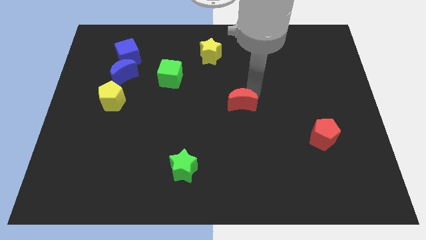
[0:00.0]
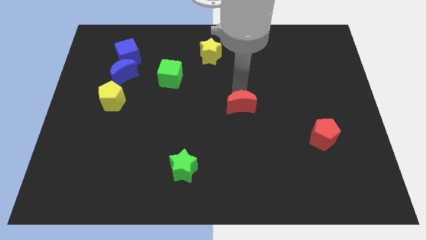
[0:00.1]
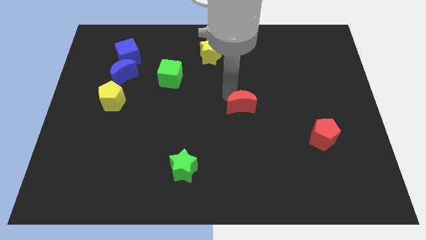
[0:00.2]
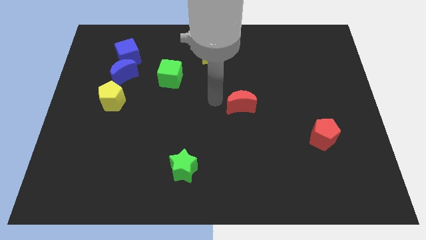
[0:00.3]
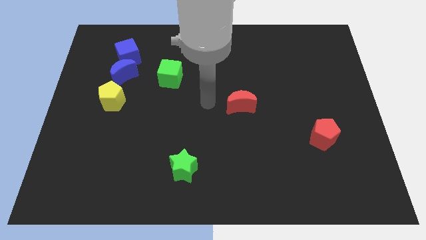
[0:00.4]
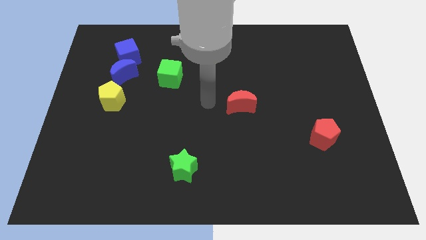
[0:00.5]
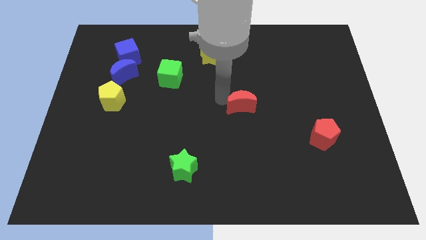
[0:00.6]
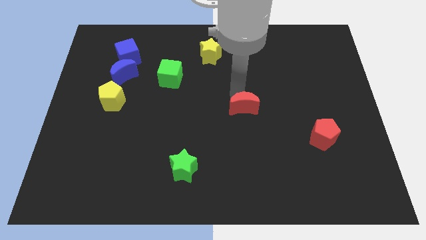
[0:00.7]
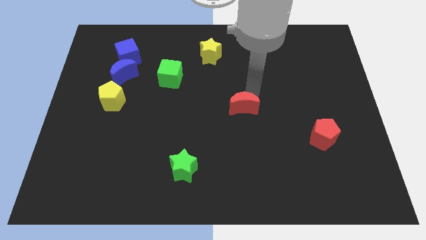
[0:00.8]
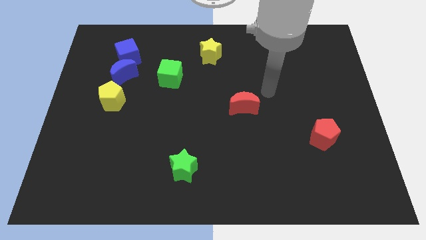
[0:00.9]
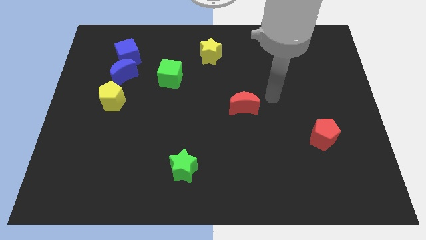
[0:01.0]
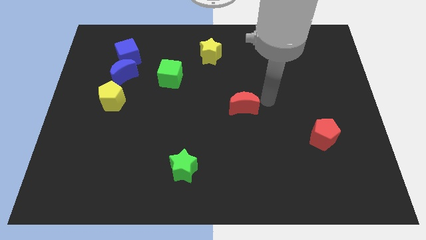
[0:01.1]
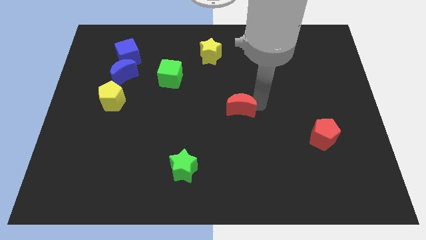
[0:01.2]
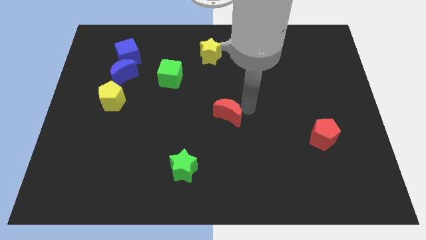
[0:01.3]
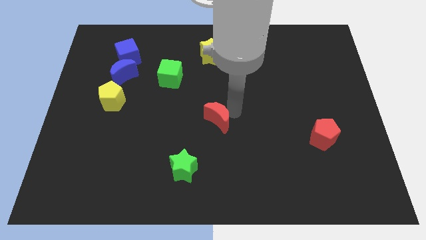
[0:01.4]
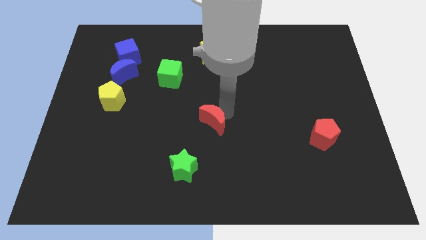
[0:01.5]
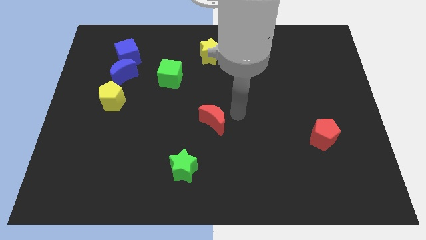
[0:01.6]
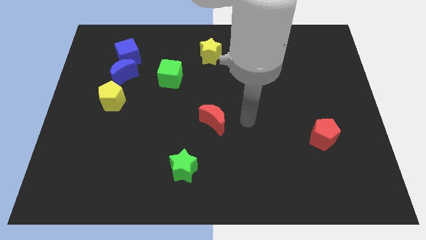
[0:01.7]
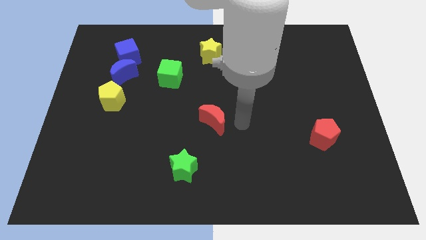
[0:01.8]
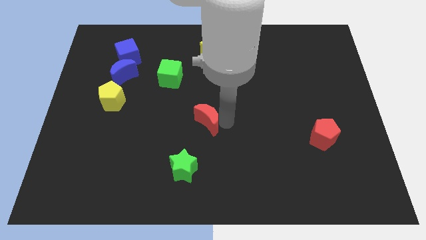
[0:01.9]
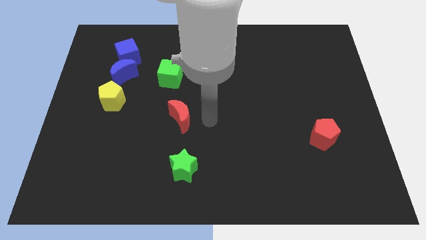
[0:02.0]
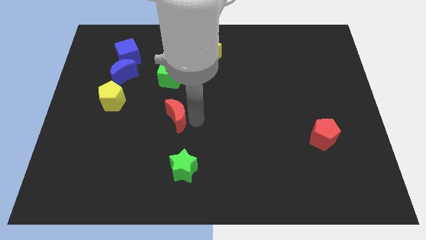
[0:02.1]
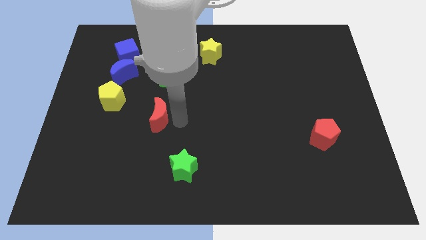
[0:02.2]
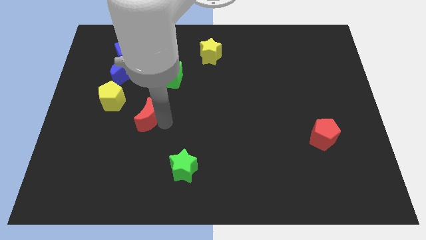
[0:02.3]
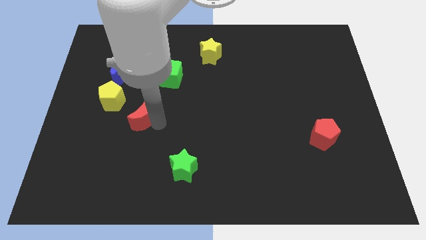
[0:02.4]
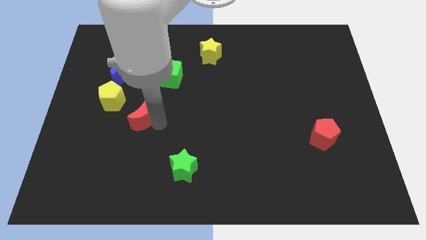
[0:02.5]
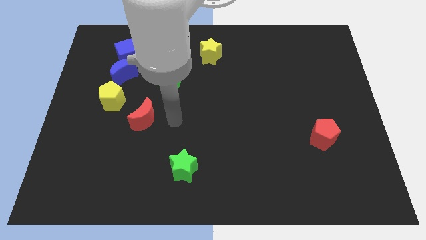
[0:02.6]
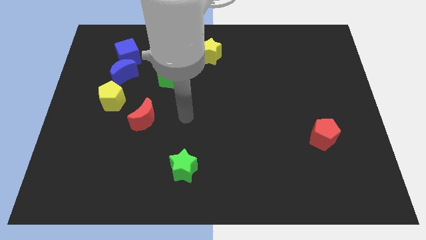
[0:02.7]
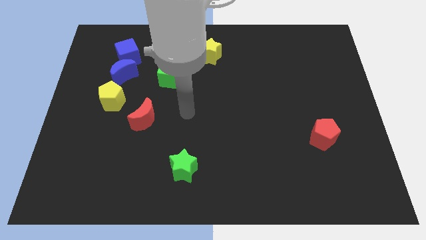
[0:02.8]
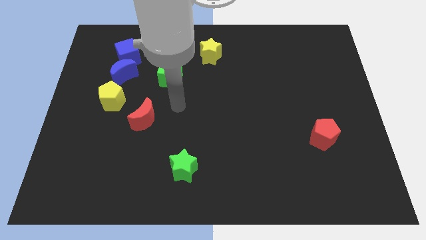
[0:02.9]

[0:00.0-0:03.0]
put the red moon at the bottom right of the yellow pentagon

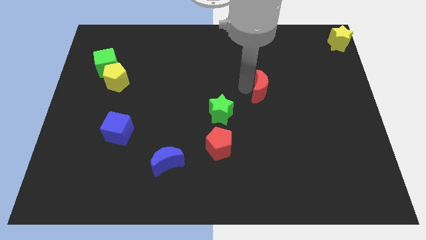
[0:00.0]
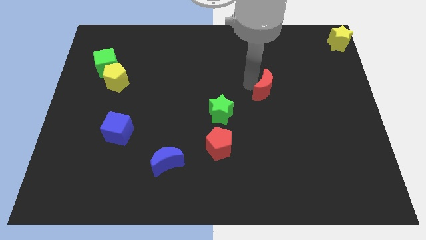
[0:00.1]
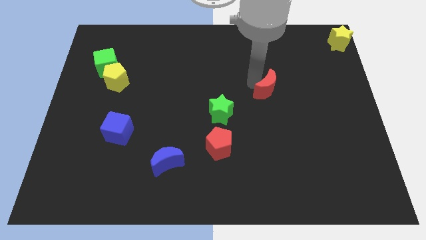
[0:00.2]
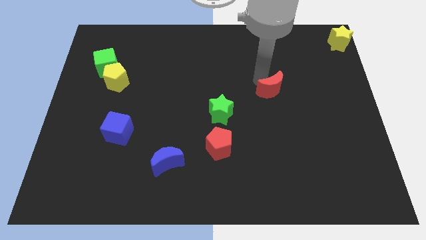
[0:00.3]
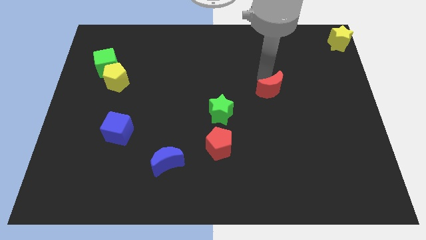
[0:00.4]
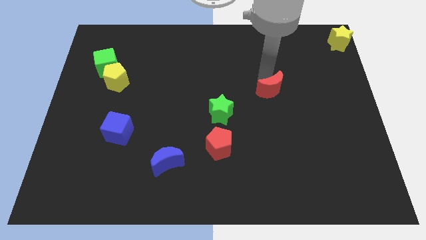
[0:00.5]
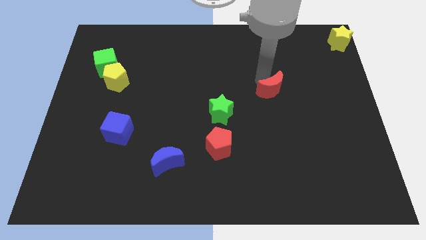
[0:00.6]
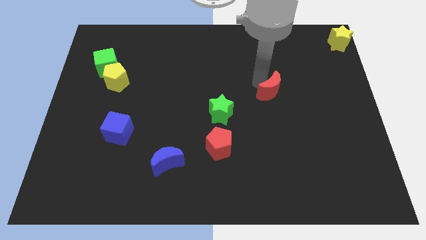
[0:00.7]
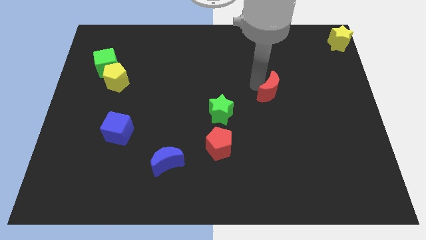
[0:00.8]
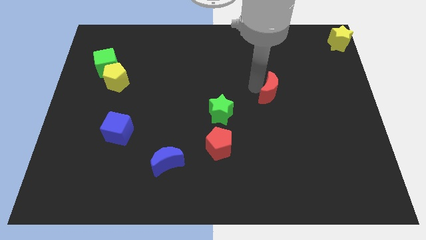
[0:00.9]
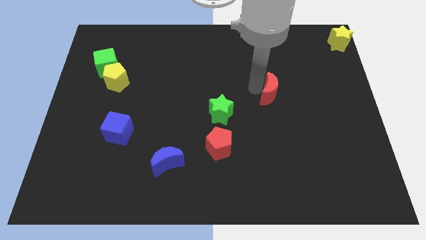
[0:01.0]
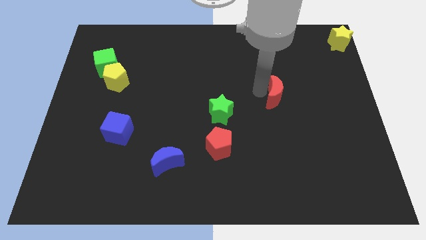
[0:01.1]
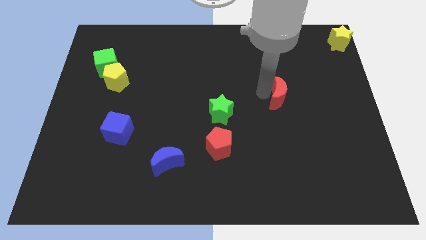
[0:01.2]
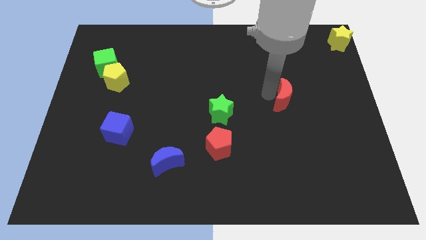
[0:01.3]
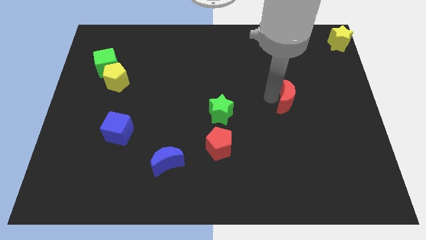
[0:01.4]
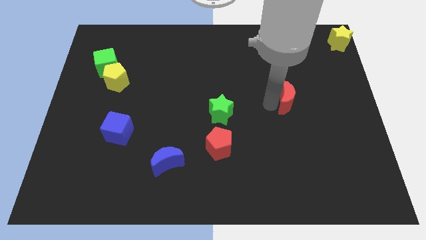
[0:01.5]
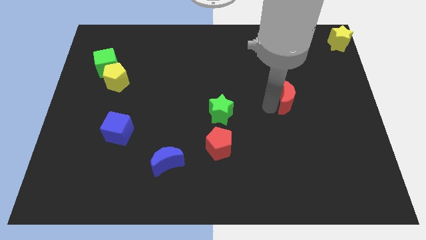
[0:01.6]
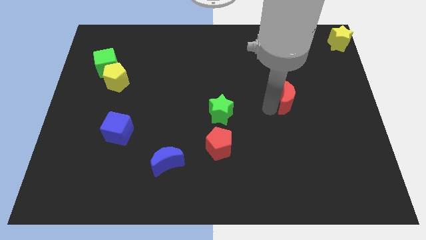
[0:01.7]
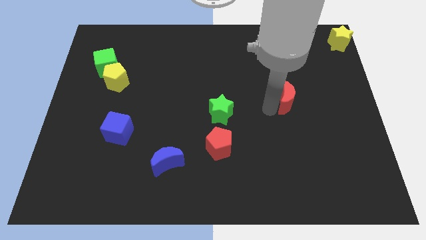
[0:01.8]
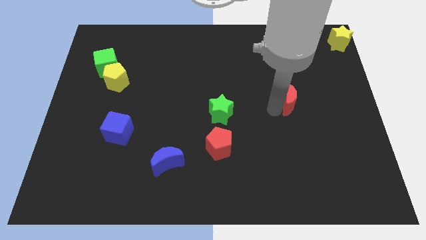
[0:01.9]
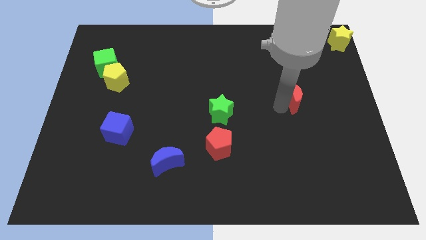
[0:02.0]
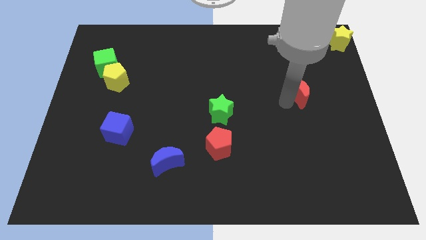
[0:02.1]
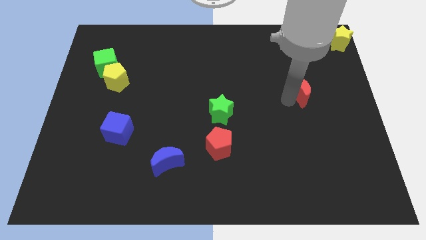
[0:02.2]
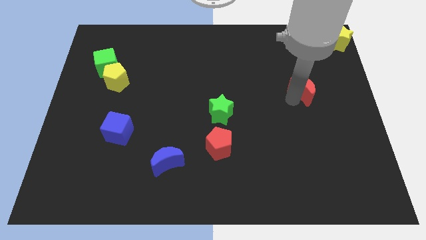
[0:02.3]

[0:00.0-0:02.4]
move the red moon towards the center right

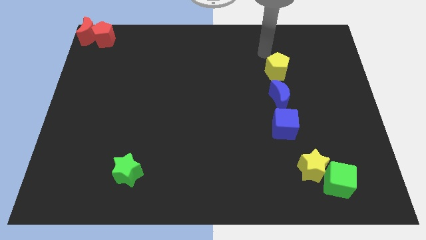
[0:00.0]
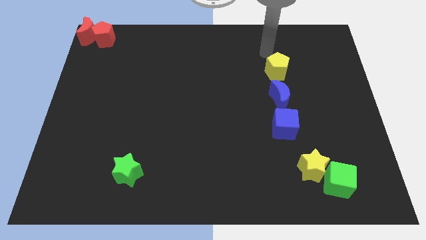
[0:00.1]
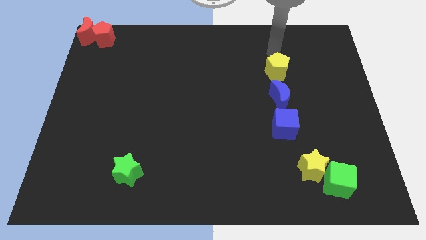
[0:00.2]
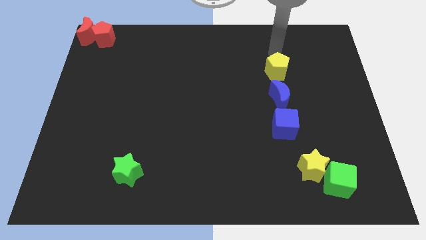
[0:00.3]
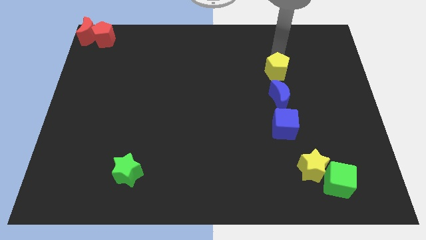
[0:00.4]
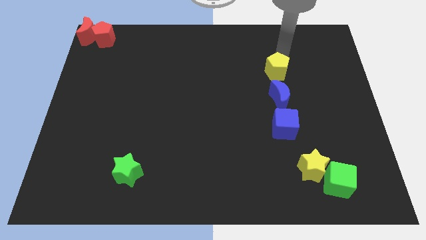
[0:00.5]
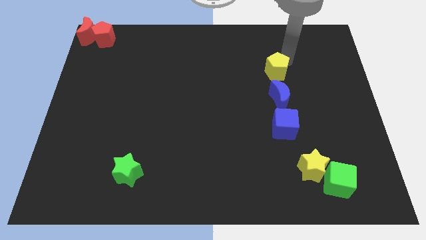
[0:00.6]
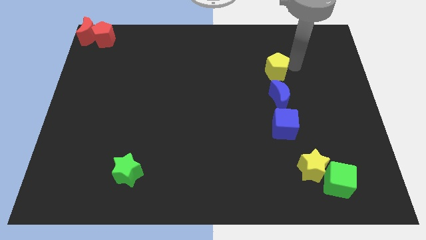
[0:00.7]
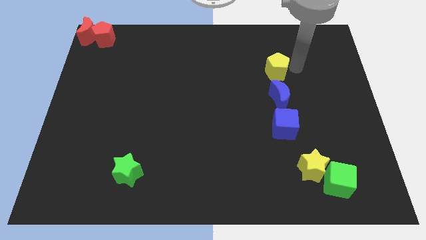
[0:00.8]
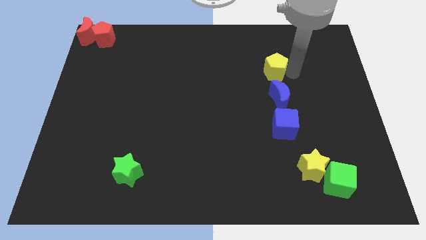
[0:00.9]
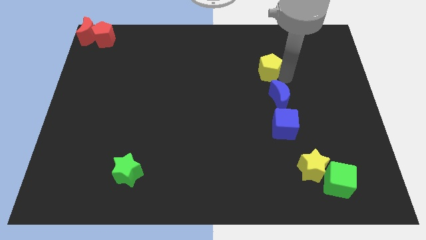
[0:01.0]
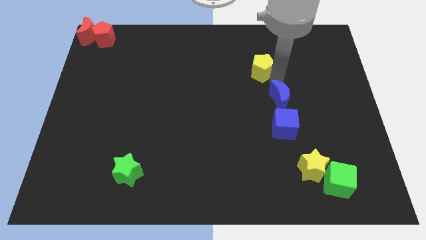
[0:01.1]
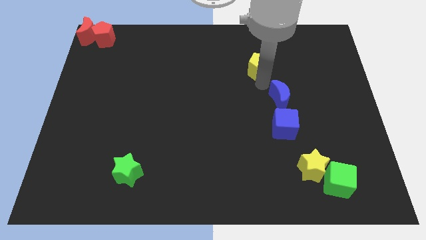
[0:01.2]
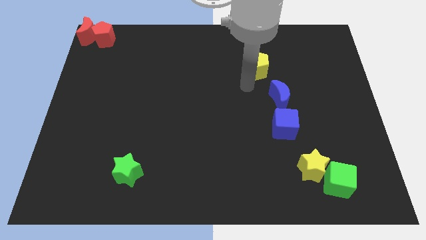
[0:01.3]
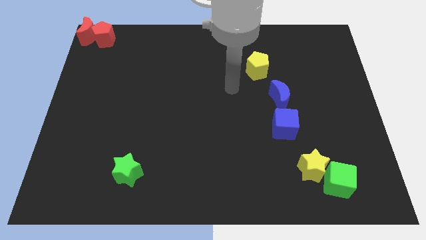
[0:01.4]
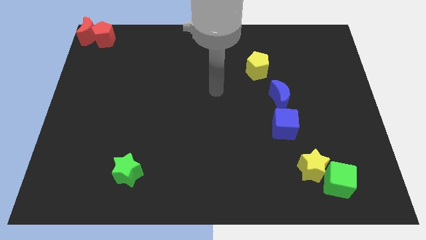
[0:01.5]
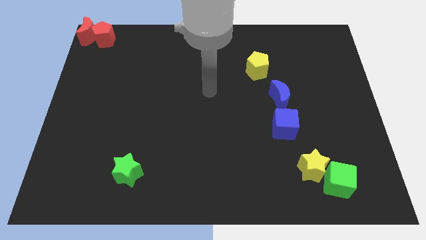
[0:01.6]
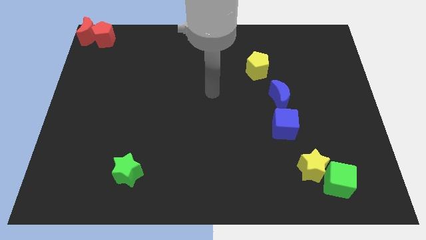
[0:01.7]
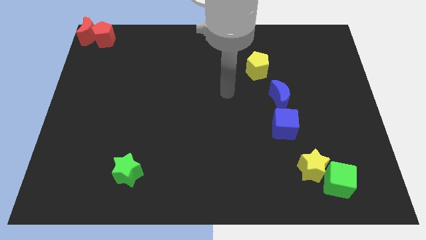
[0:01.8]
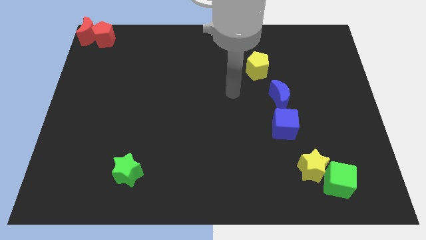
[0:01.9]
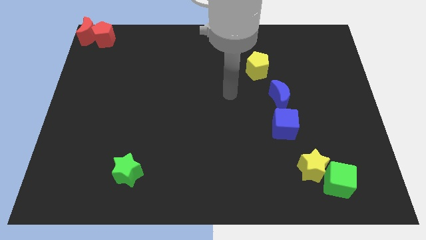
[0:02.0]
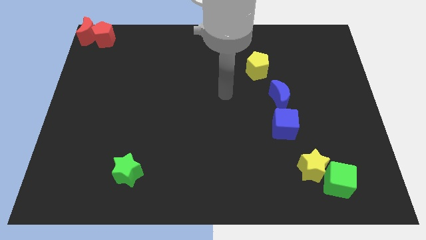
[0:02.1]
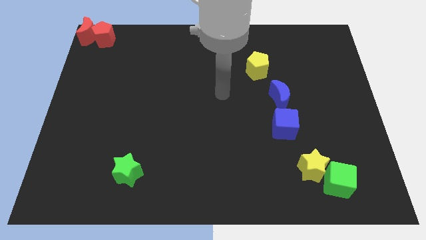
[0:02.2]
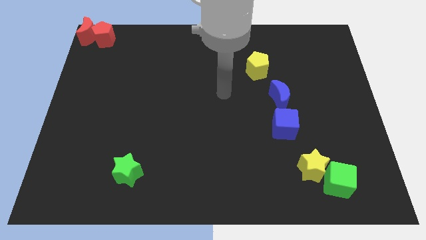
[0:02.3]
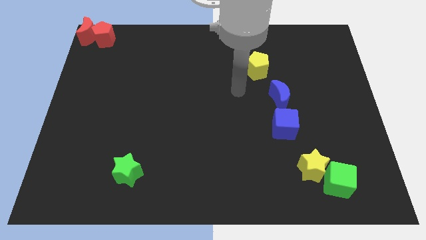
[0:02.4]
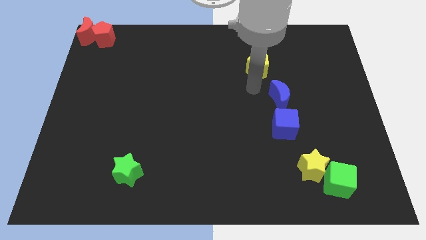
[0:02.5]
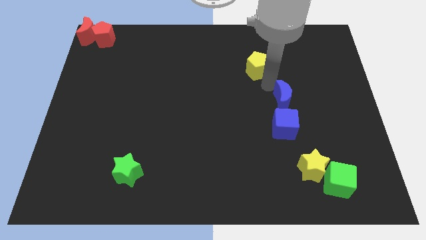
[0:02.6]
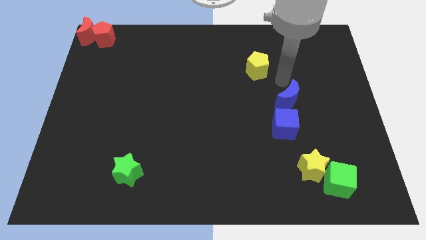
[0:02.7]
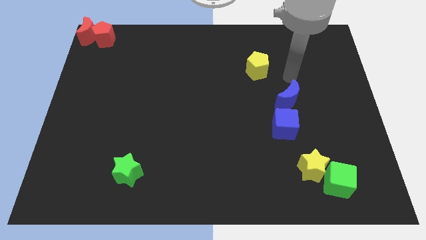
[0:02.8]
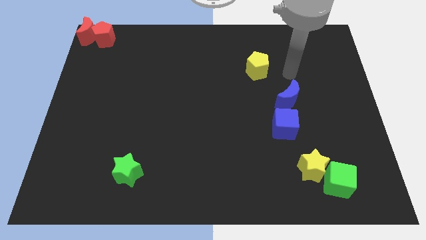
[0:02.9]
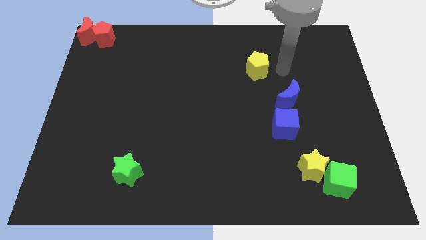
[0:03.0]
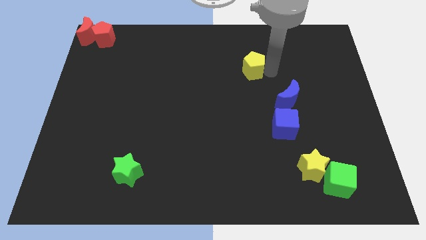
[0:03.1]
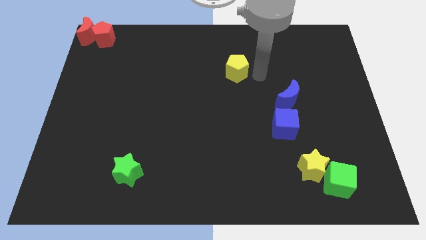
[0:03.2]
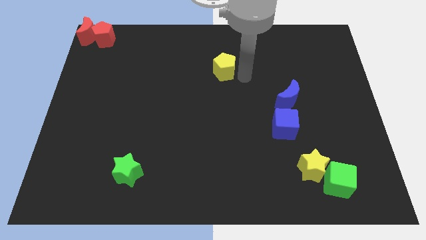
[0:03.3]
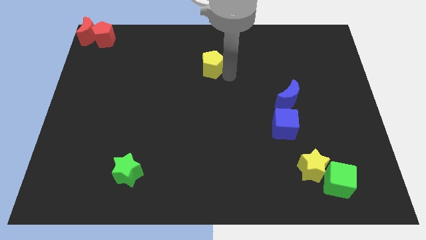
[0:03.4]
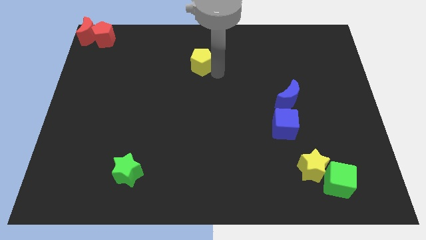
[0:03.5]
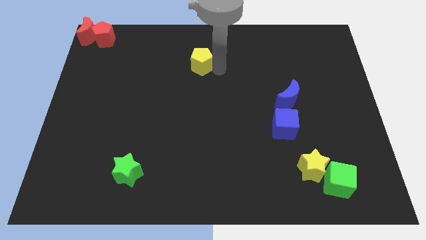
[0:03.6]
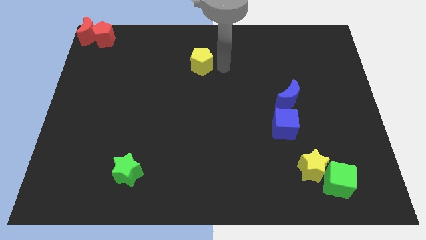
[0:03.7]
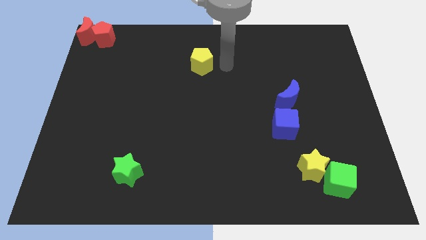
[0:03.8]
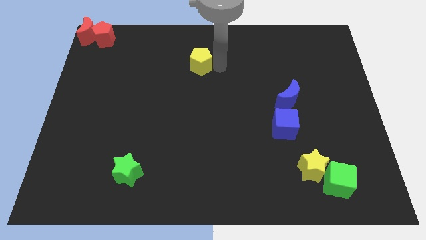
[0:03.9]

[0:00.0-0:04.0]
move the yellow pentagon to the center top
